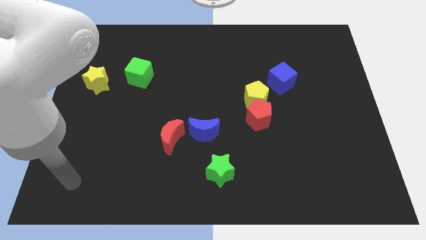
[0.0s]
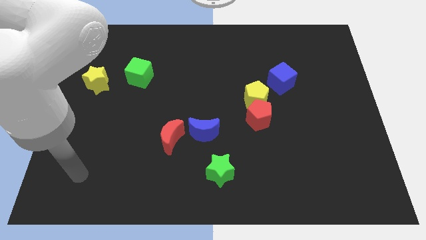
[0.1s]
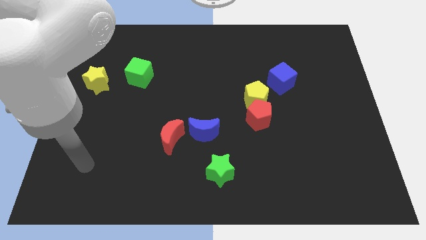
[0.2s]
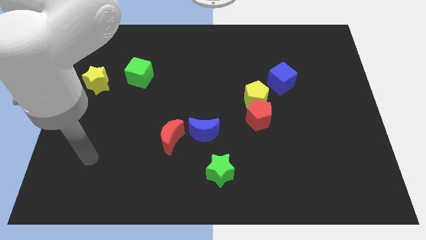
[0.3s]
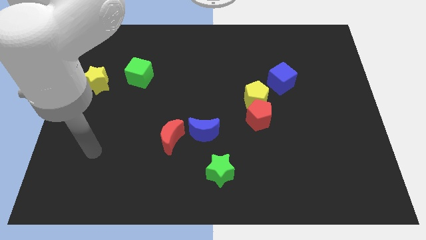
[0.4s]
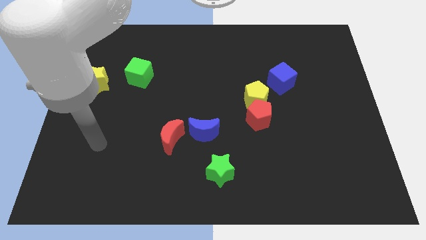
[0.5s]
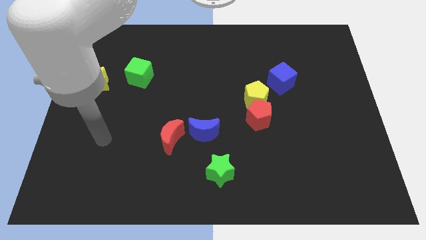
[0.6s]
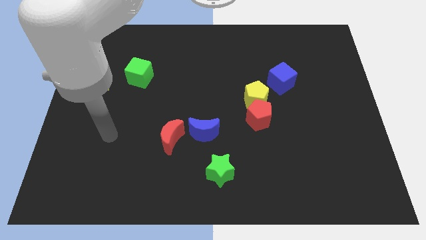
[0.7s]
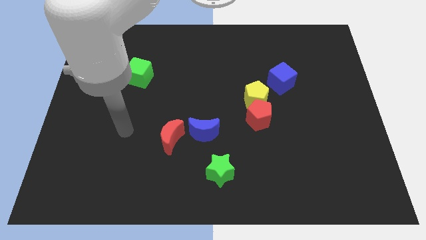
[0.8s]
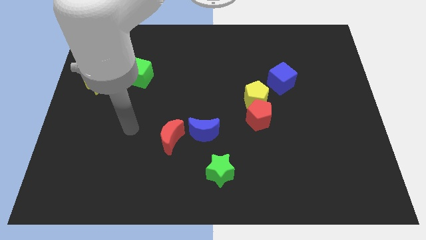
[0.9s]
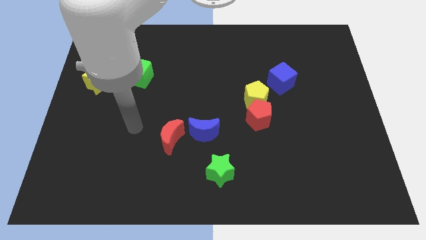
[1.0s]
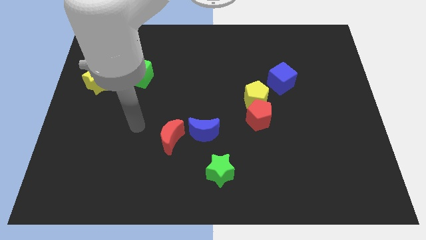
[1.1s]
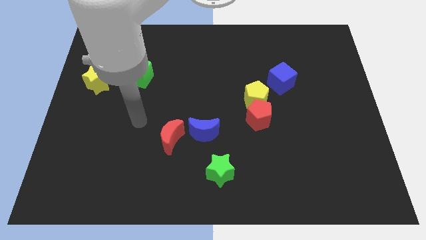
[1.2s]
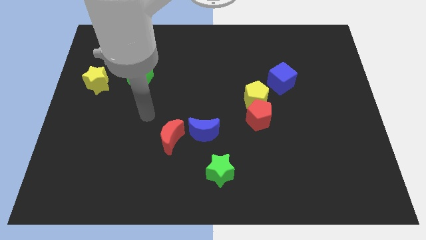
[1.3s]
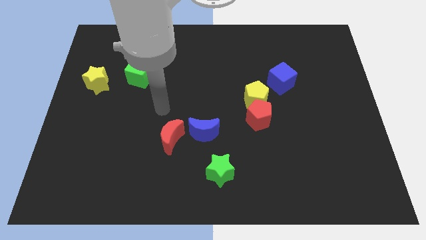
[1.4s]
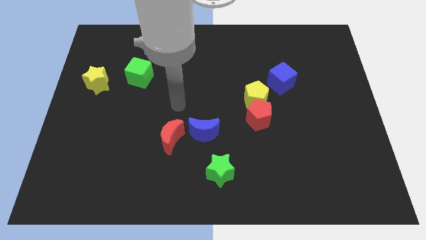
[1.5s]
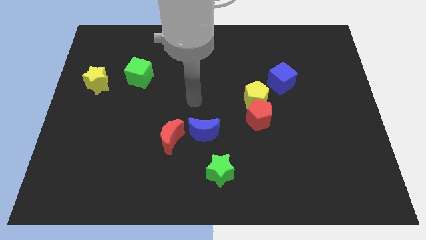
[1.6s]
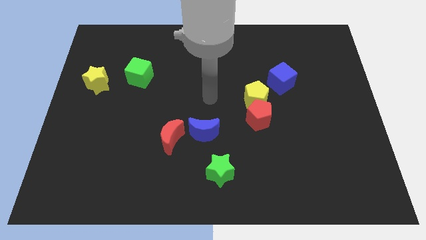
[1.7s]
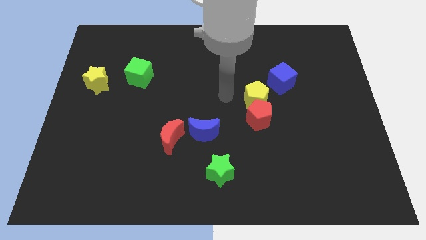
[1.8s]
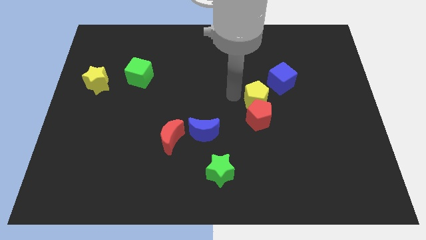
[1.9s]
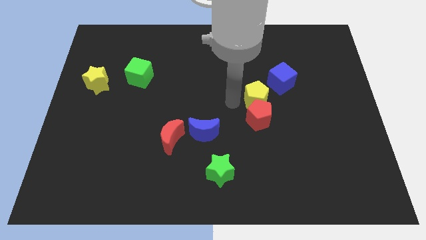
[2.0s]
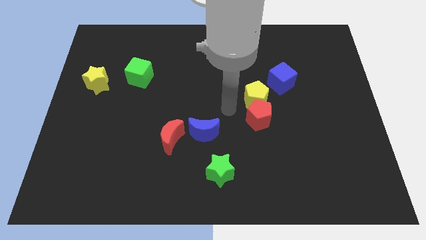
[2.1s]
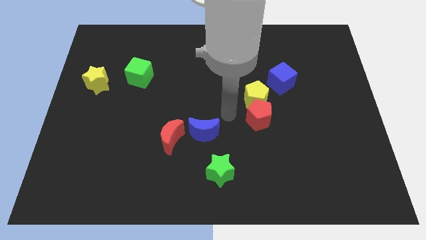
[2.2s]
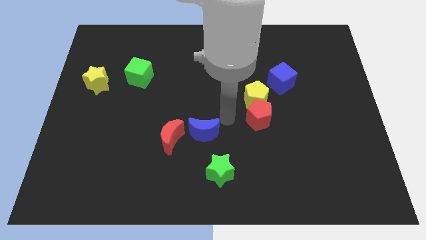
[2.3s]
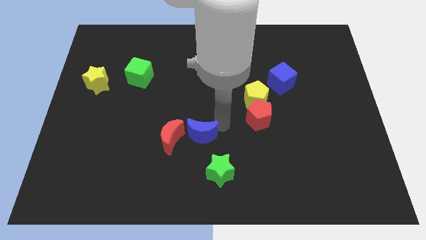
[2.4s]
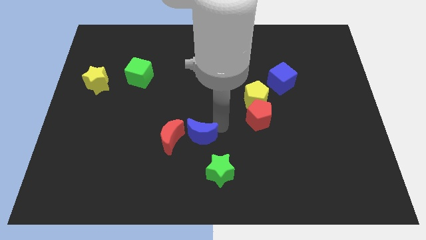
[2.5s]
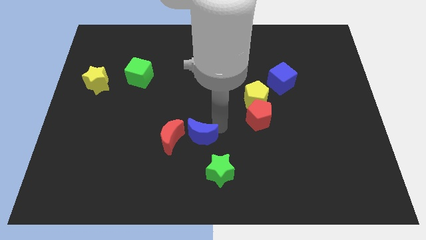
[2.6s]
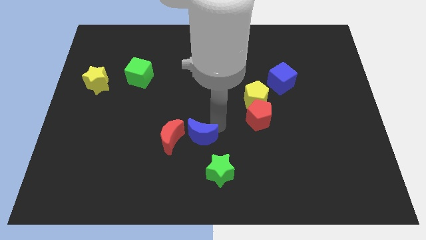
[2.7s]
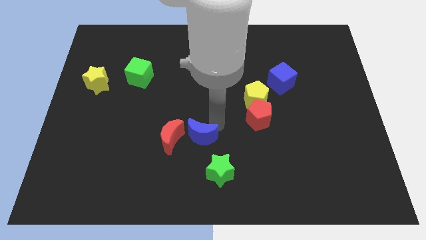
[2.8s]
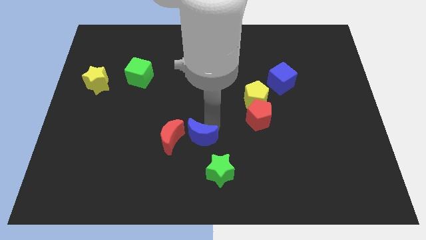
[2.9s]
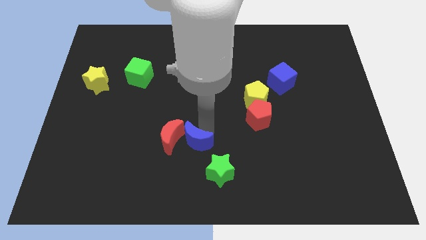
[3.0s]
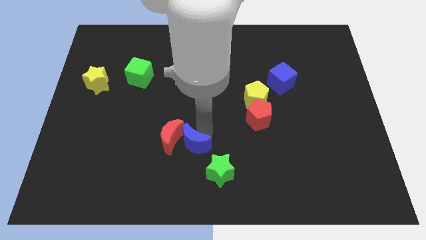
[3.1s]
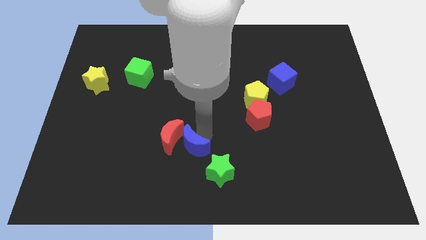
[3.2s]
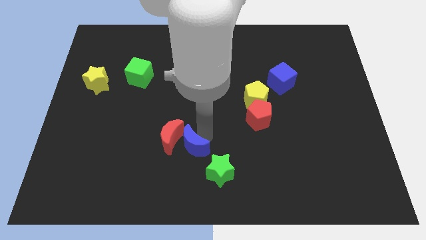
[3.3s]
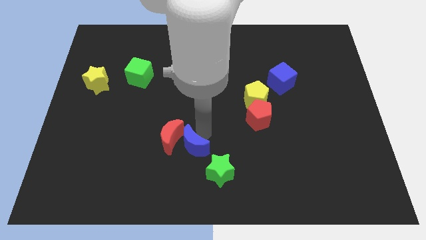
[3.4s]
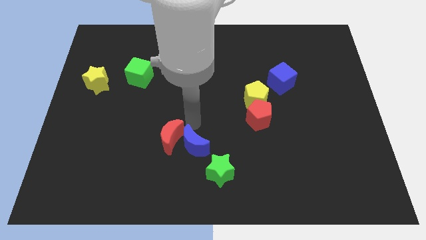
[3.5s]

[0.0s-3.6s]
move the blue moon slightly to the down

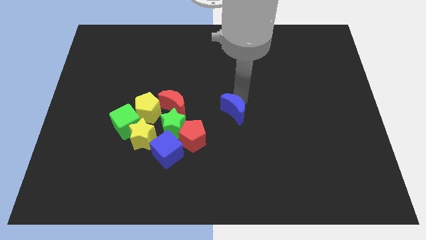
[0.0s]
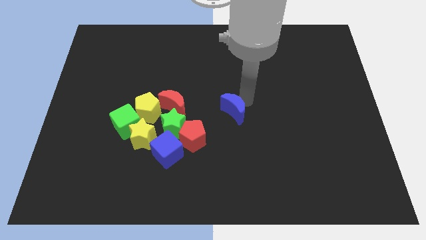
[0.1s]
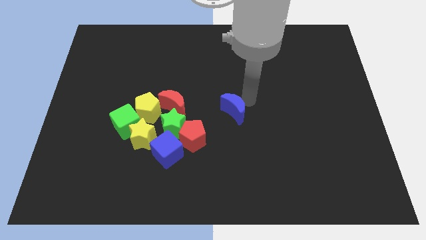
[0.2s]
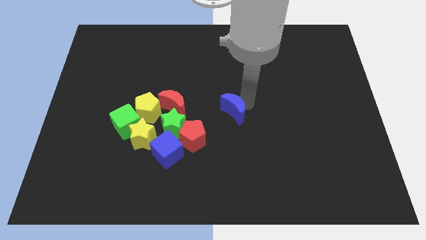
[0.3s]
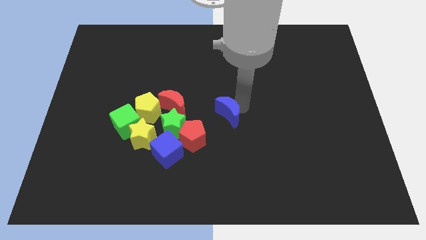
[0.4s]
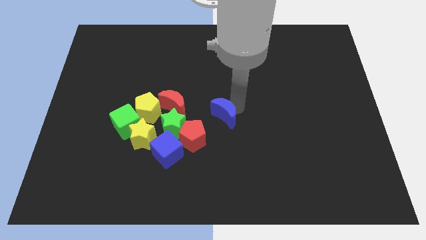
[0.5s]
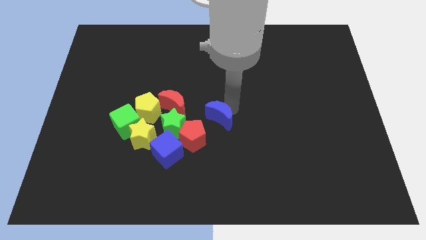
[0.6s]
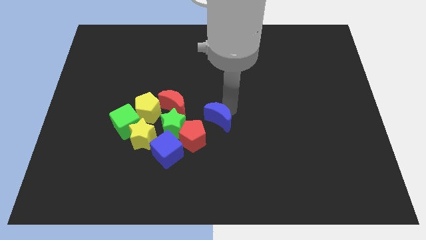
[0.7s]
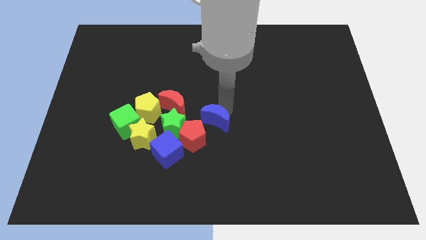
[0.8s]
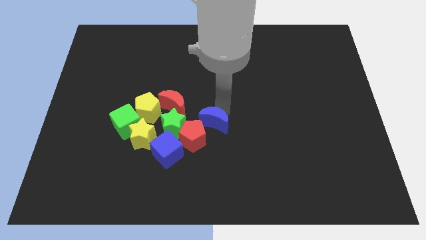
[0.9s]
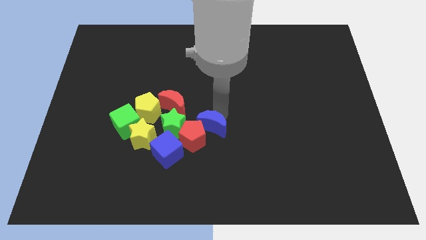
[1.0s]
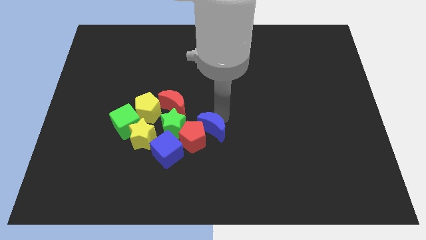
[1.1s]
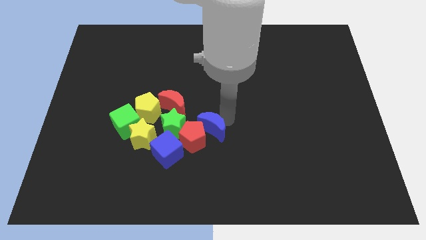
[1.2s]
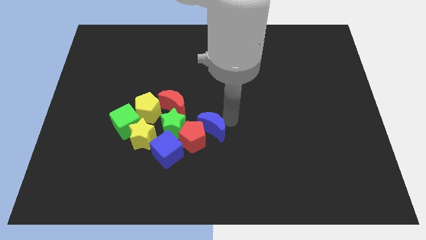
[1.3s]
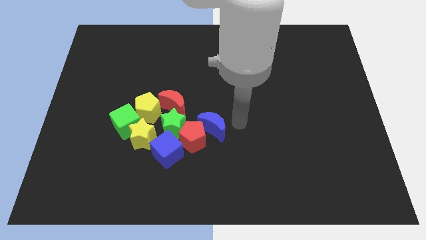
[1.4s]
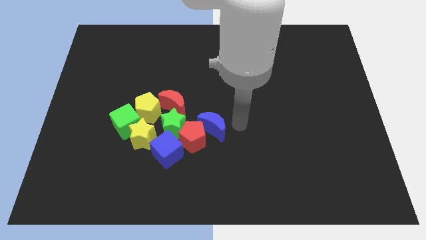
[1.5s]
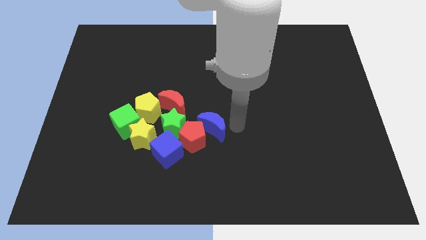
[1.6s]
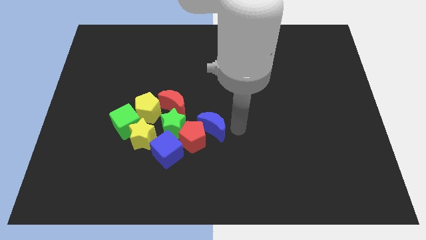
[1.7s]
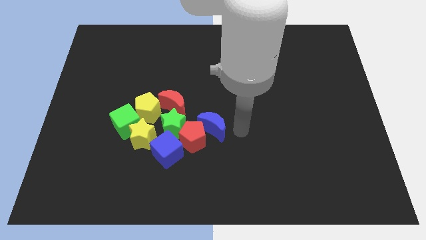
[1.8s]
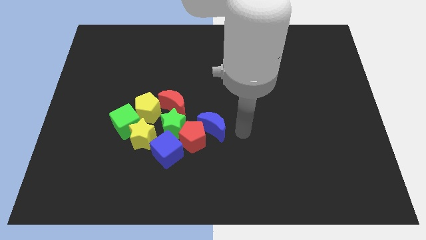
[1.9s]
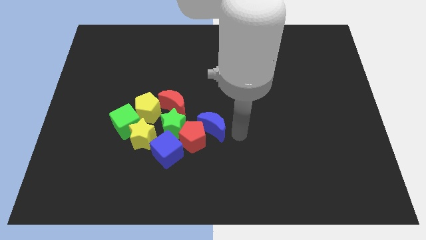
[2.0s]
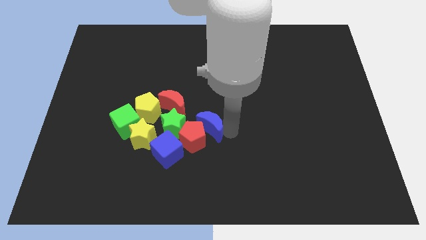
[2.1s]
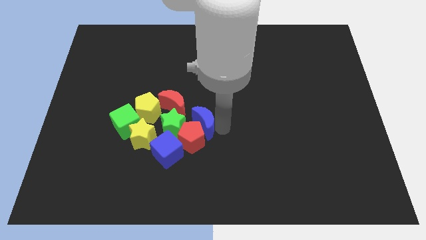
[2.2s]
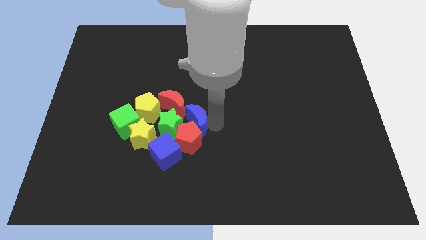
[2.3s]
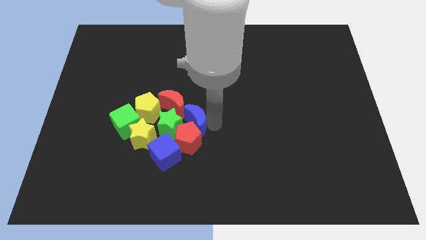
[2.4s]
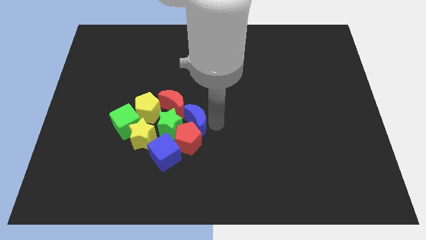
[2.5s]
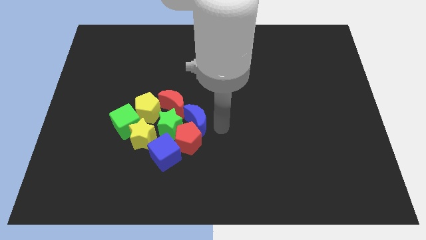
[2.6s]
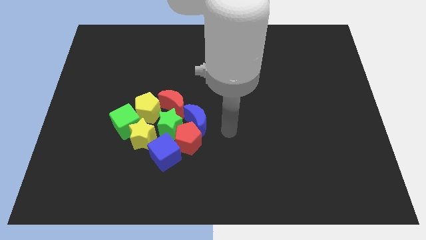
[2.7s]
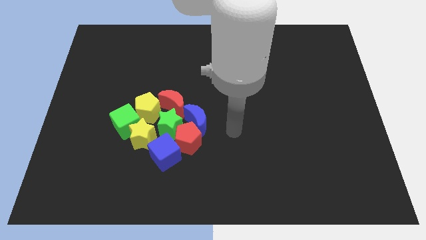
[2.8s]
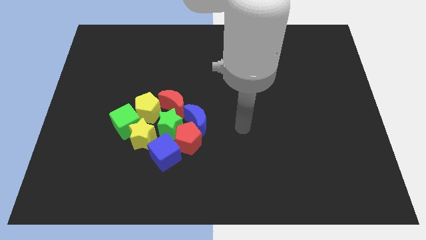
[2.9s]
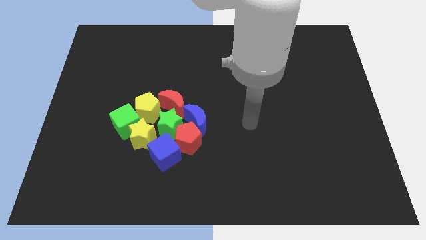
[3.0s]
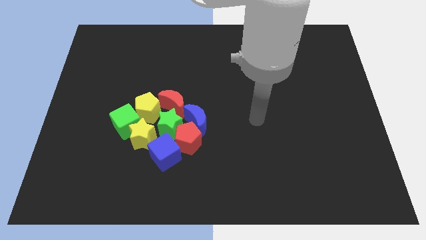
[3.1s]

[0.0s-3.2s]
push the blue crescent into the group of blocks

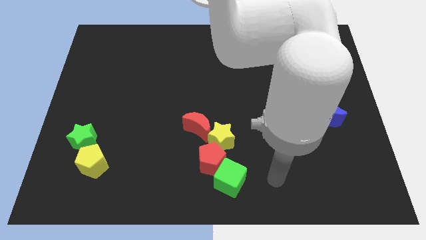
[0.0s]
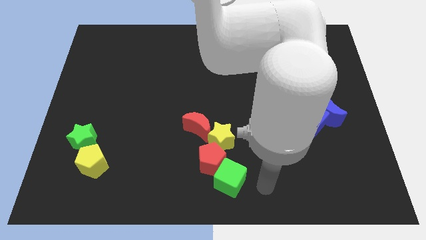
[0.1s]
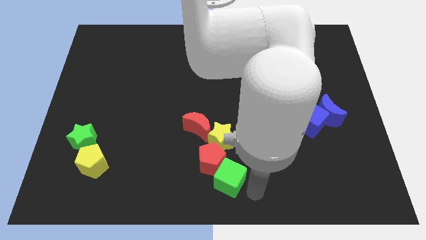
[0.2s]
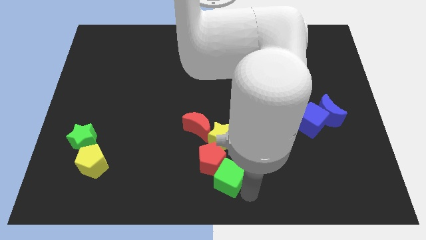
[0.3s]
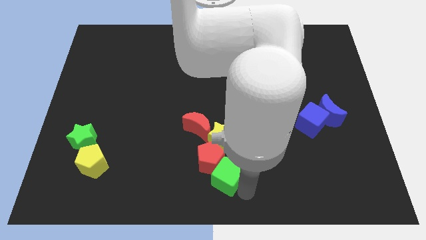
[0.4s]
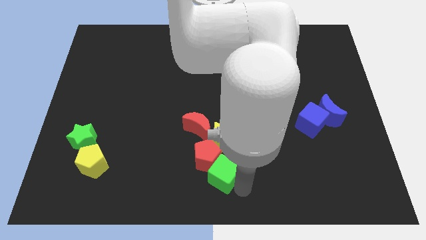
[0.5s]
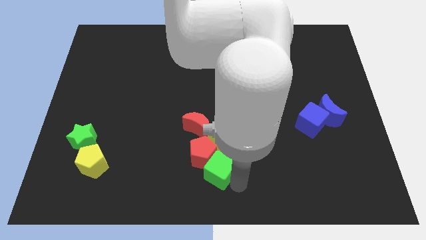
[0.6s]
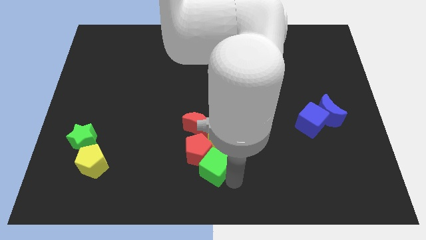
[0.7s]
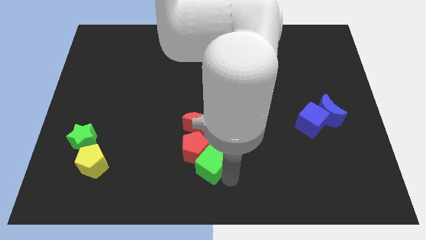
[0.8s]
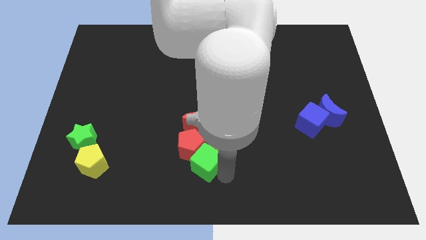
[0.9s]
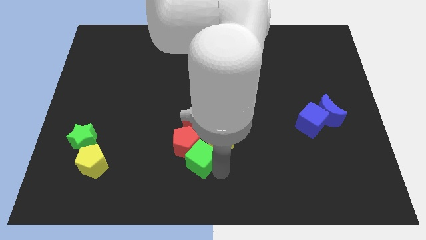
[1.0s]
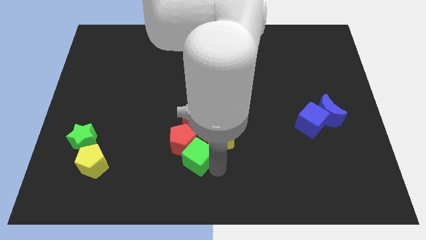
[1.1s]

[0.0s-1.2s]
push green cube in red pentagon

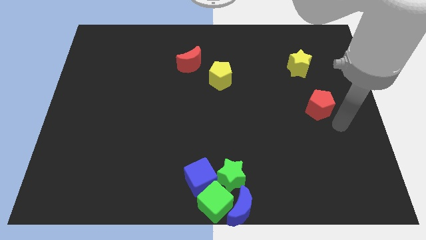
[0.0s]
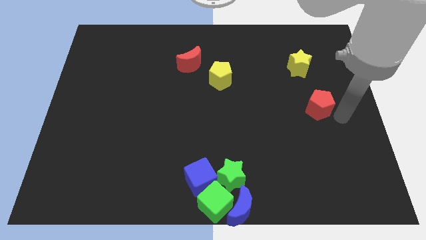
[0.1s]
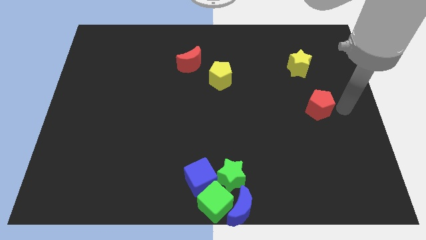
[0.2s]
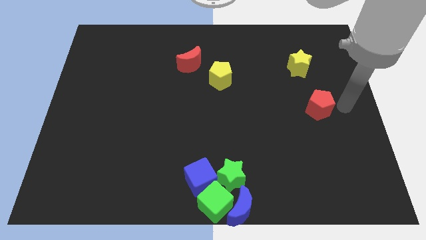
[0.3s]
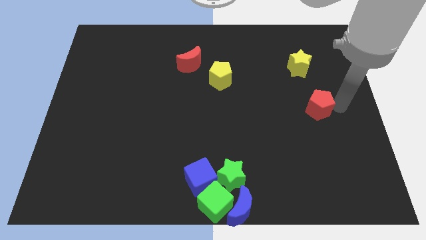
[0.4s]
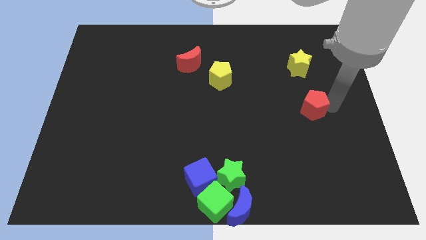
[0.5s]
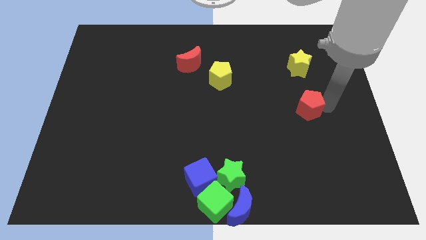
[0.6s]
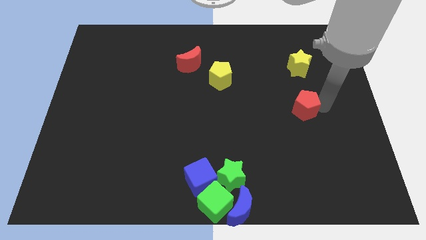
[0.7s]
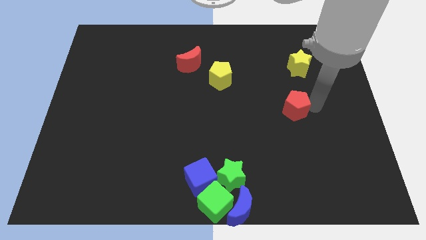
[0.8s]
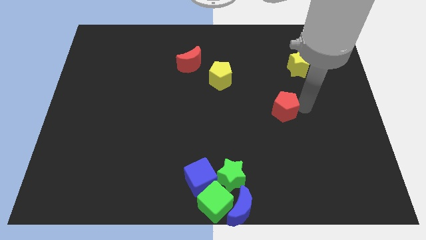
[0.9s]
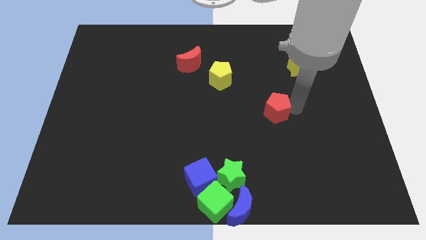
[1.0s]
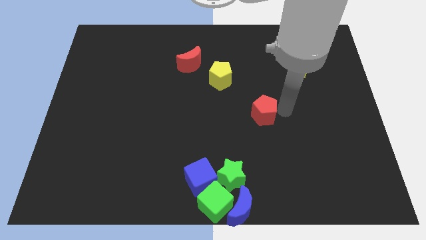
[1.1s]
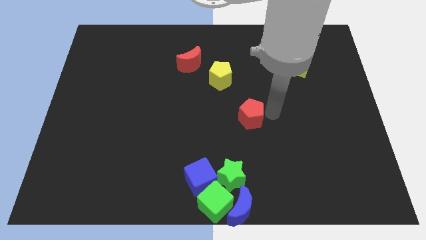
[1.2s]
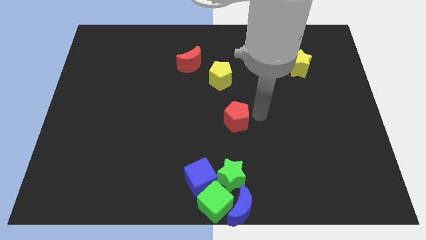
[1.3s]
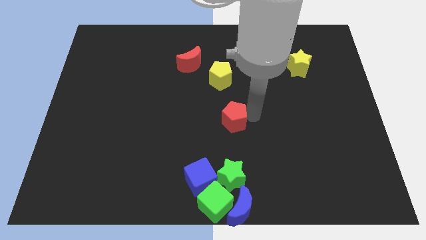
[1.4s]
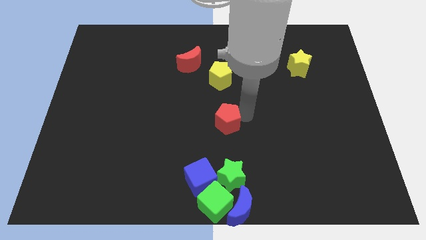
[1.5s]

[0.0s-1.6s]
slide the red pentagon slightly towards the center
